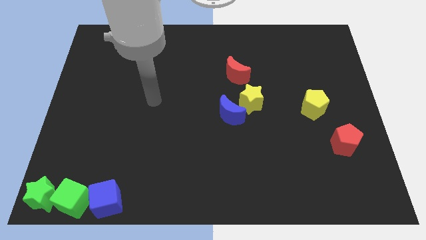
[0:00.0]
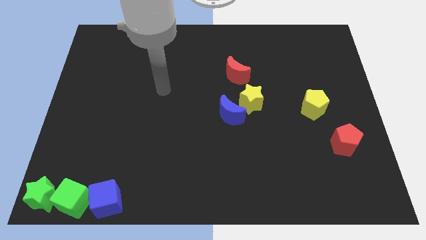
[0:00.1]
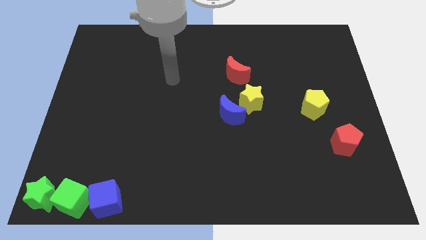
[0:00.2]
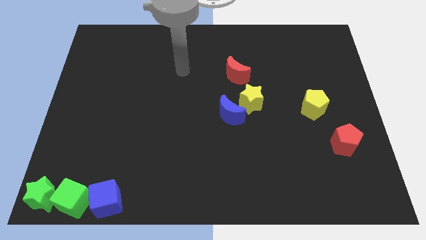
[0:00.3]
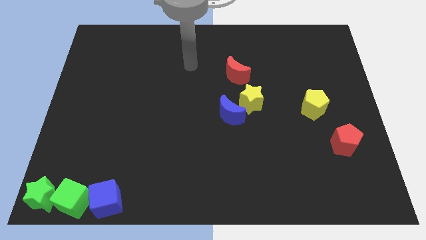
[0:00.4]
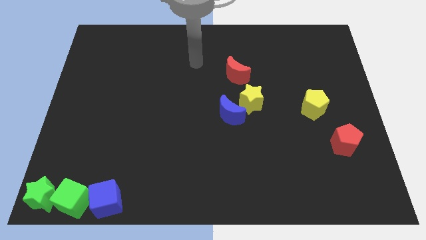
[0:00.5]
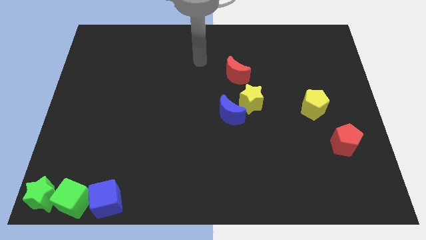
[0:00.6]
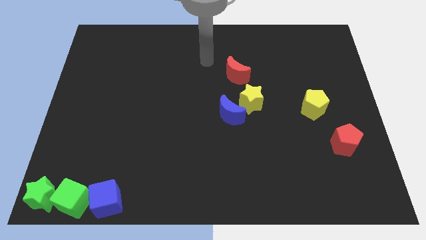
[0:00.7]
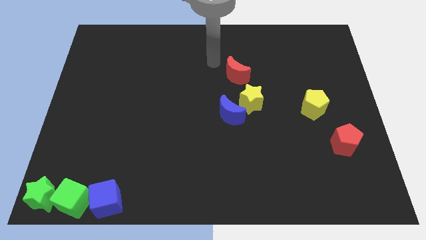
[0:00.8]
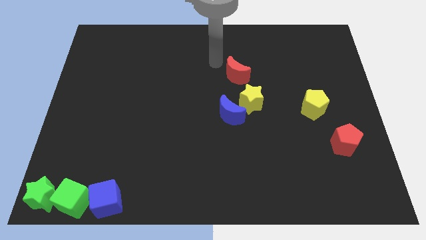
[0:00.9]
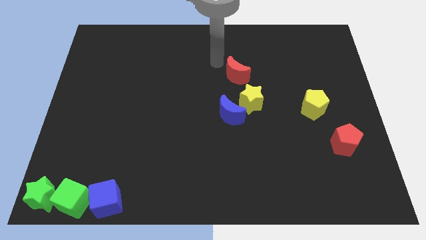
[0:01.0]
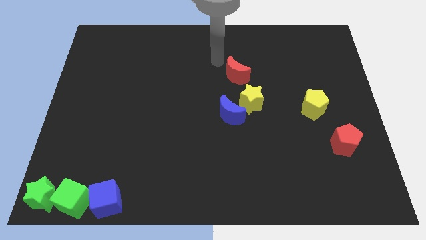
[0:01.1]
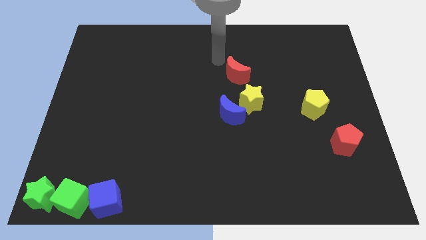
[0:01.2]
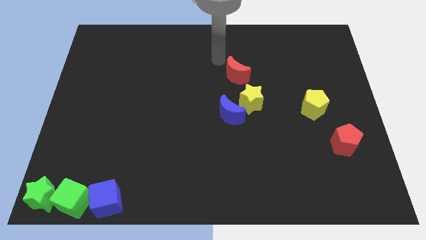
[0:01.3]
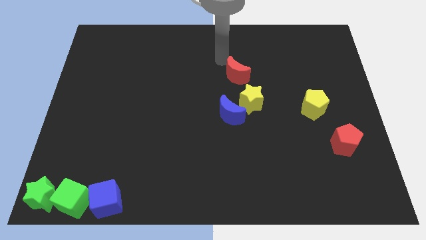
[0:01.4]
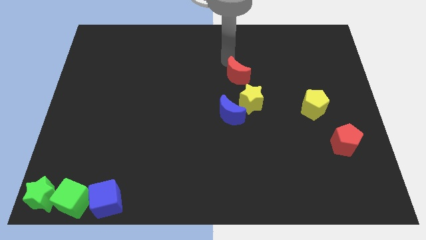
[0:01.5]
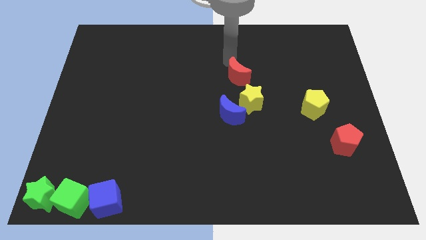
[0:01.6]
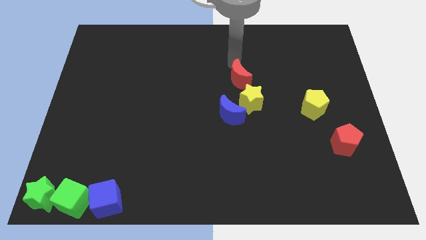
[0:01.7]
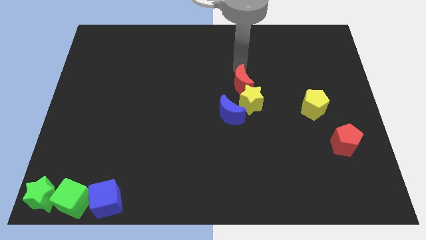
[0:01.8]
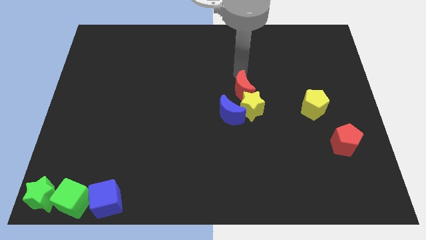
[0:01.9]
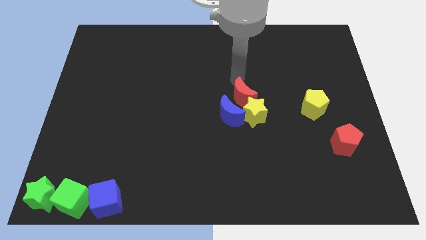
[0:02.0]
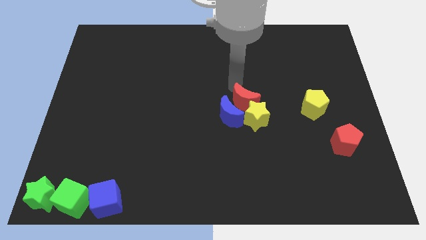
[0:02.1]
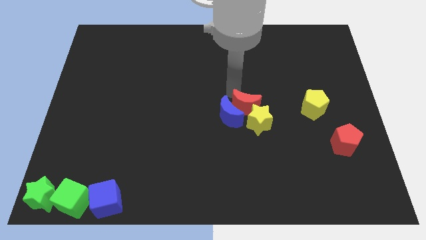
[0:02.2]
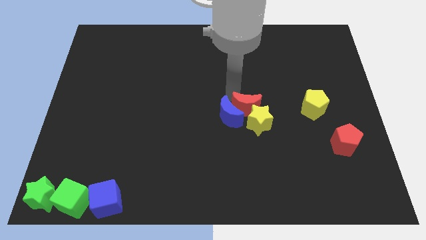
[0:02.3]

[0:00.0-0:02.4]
push the red moon into the yellow star

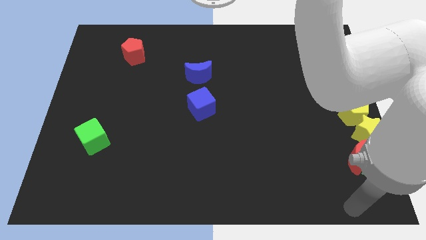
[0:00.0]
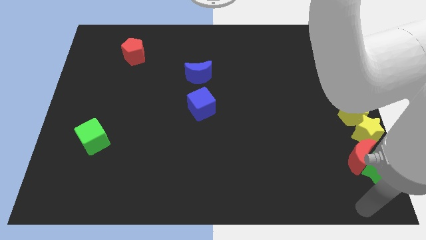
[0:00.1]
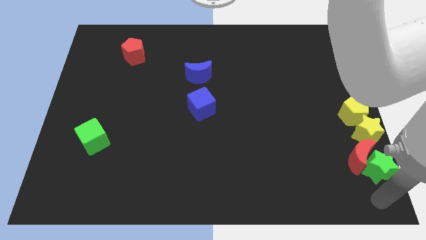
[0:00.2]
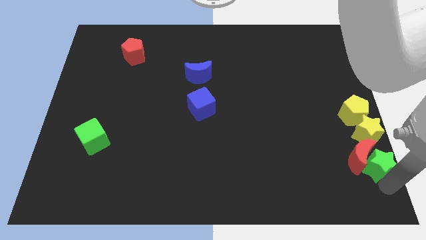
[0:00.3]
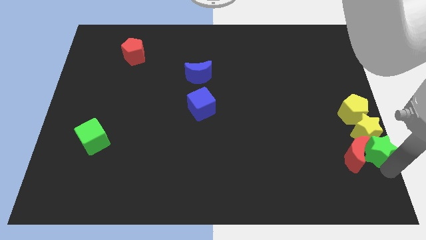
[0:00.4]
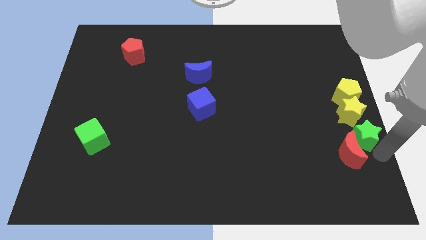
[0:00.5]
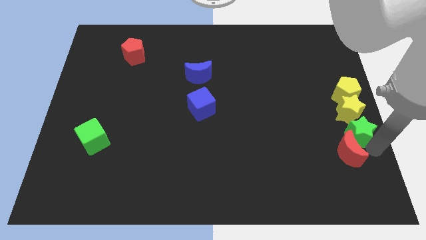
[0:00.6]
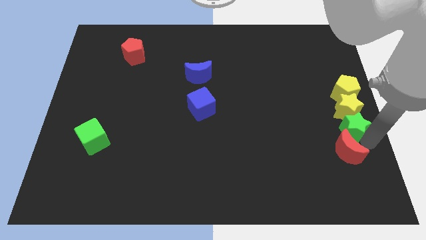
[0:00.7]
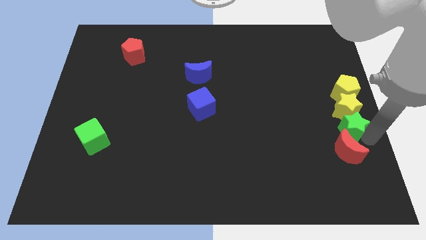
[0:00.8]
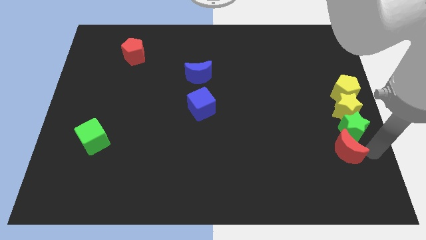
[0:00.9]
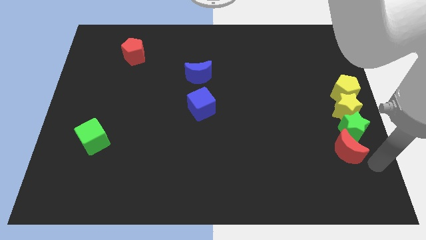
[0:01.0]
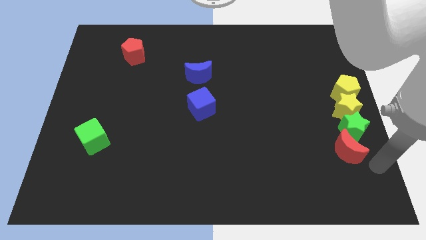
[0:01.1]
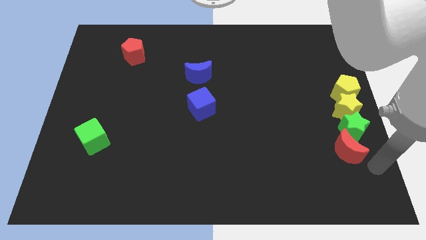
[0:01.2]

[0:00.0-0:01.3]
move the green star below the yellow star

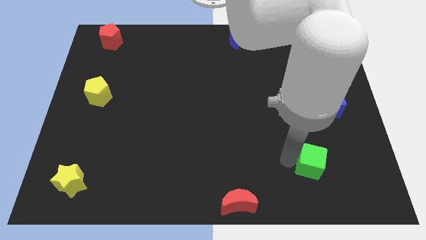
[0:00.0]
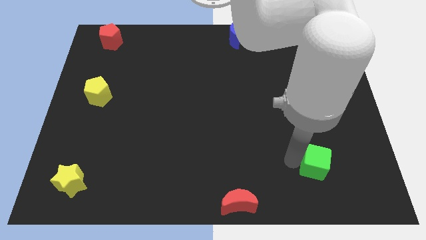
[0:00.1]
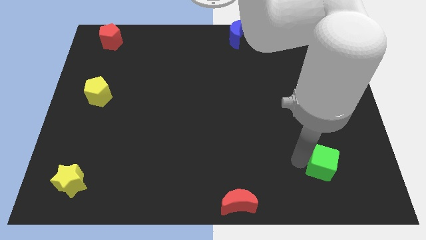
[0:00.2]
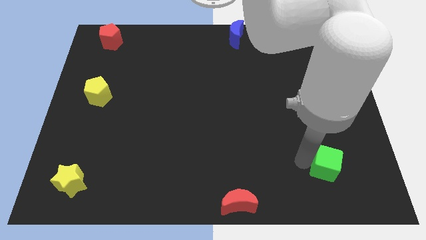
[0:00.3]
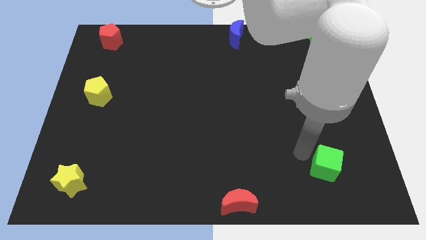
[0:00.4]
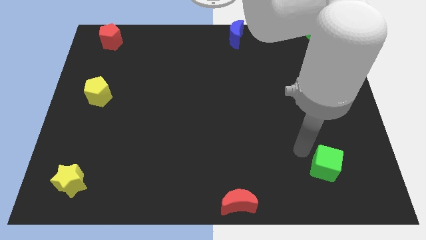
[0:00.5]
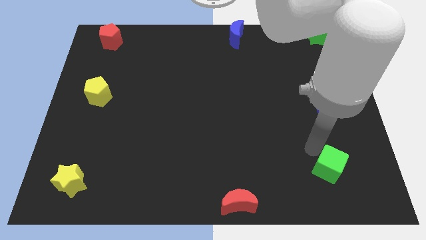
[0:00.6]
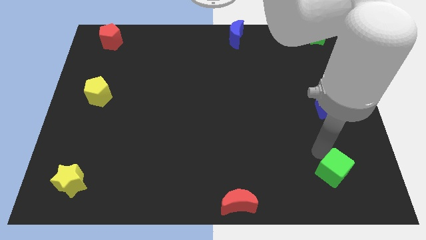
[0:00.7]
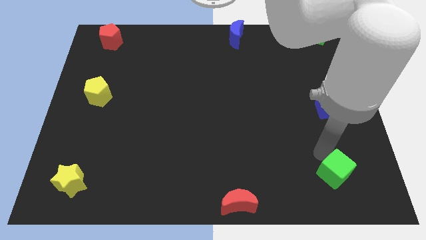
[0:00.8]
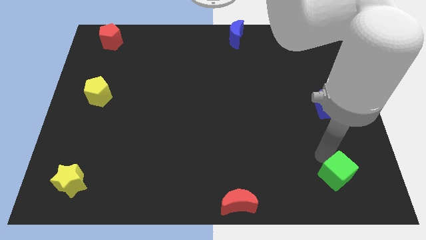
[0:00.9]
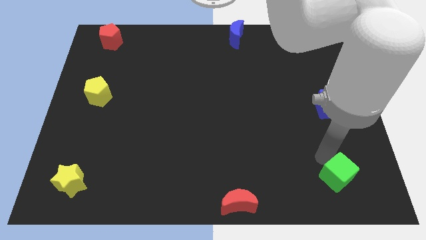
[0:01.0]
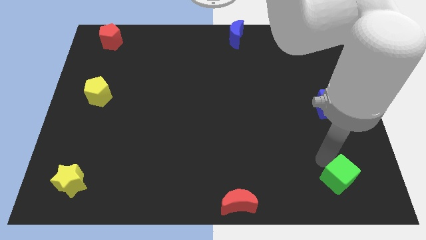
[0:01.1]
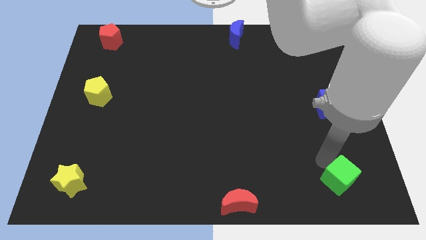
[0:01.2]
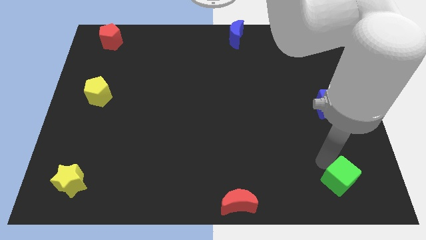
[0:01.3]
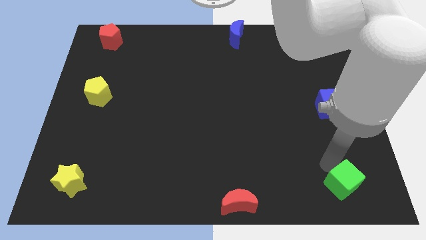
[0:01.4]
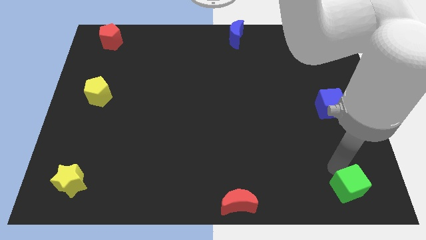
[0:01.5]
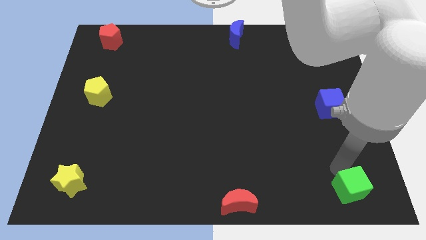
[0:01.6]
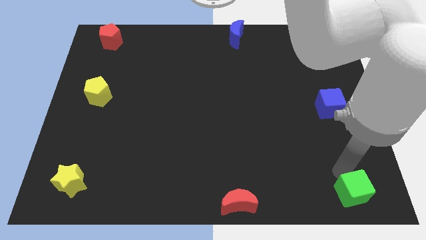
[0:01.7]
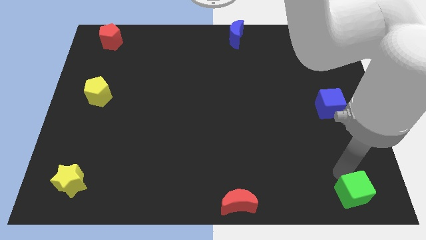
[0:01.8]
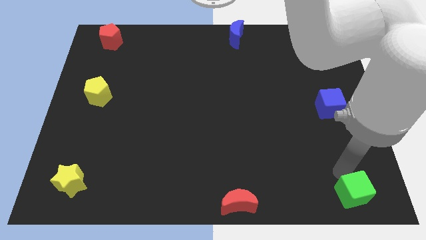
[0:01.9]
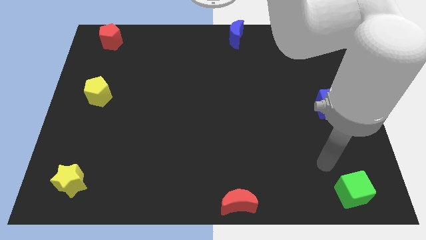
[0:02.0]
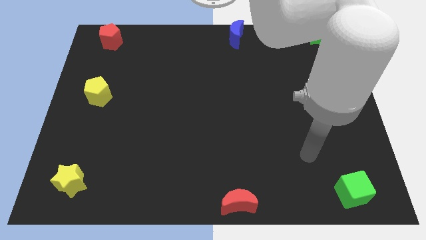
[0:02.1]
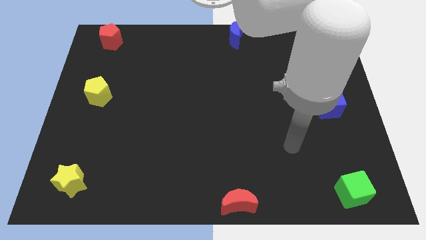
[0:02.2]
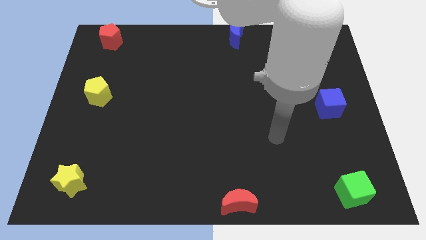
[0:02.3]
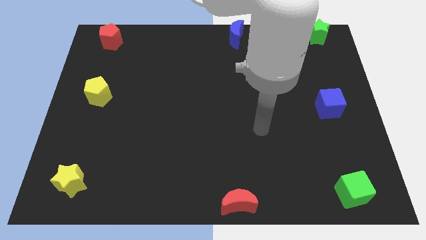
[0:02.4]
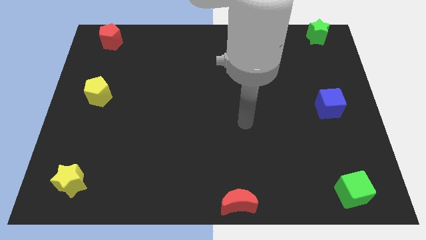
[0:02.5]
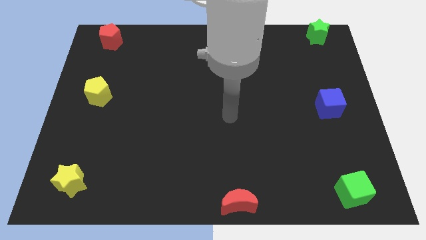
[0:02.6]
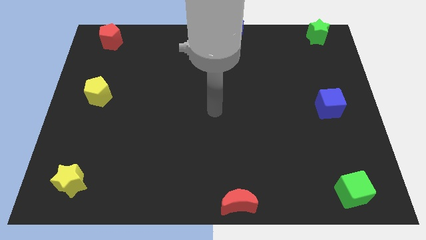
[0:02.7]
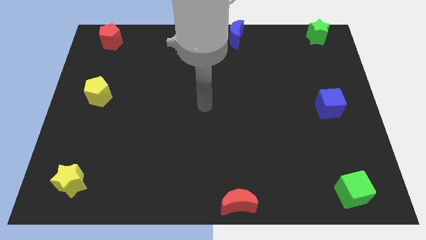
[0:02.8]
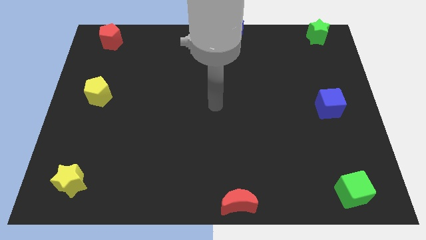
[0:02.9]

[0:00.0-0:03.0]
move the green cube to the bottom right

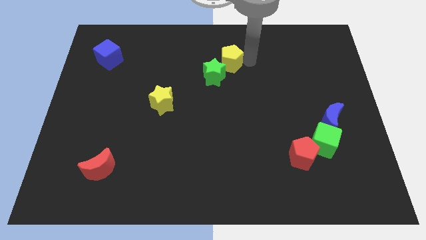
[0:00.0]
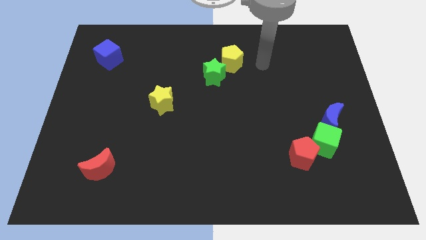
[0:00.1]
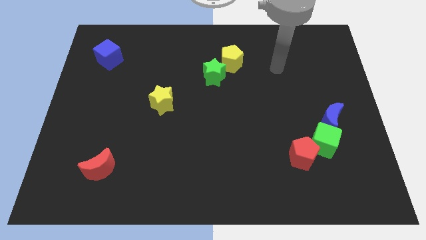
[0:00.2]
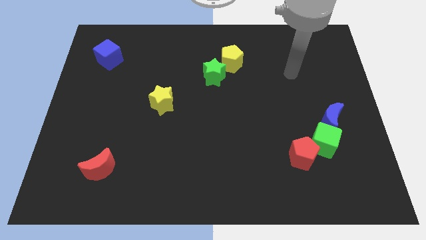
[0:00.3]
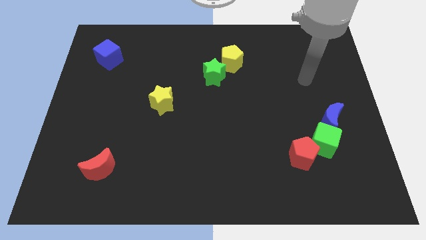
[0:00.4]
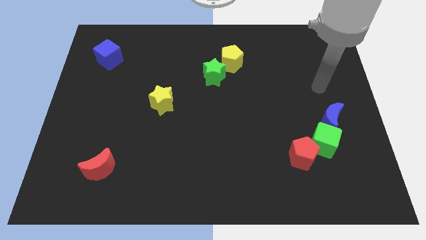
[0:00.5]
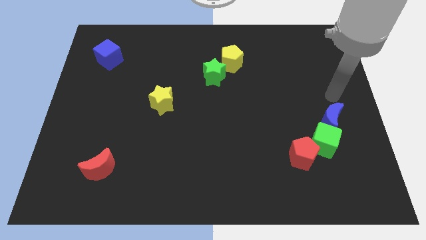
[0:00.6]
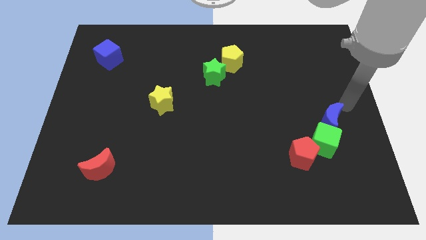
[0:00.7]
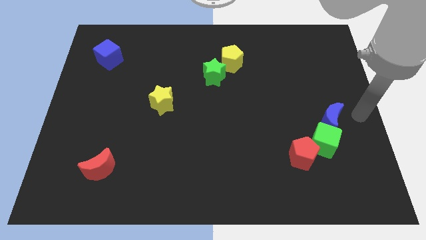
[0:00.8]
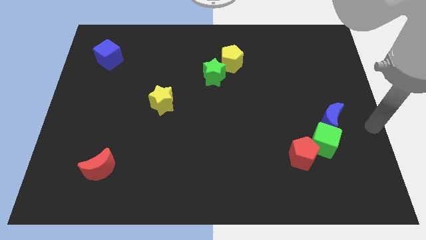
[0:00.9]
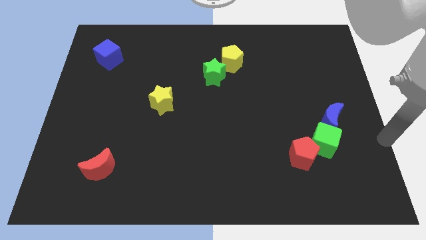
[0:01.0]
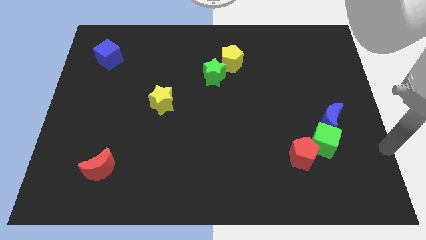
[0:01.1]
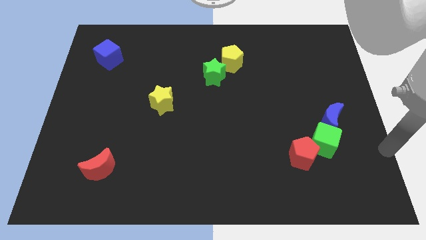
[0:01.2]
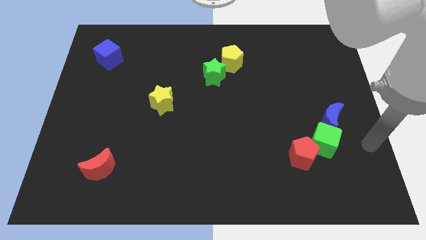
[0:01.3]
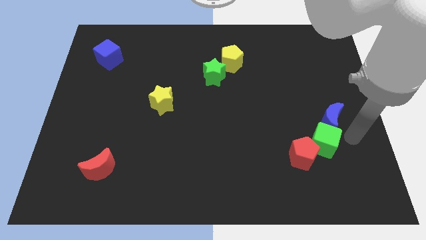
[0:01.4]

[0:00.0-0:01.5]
place the arm diagonal to the blue moon

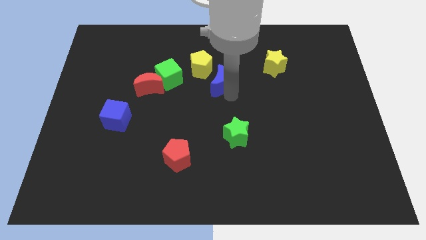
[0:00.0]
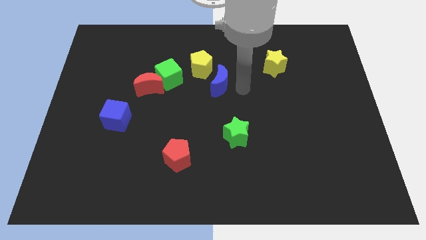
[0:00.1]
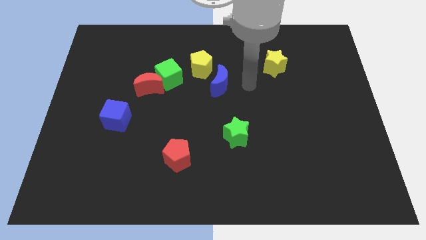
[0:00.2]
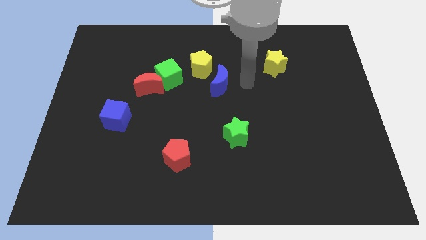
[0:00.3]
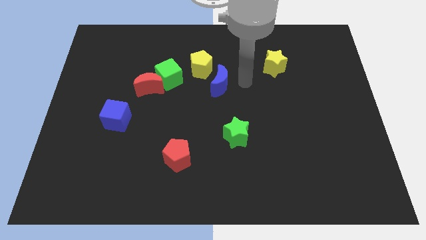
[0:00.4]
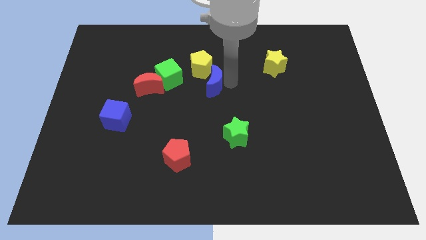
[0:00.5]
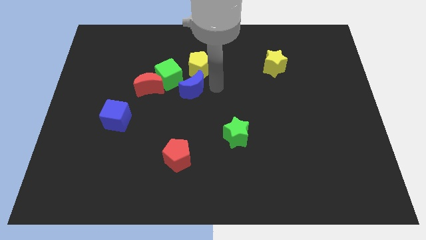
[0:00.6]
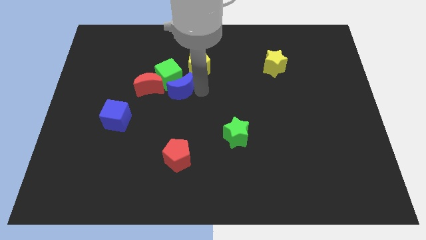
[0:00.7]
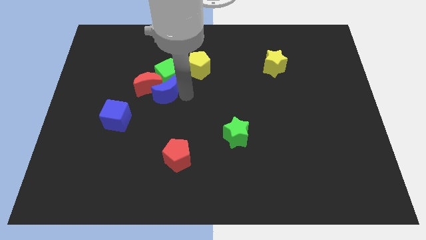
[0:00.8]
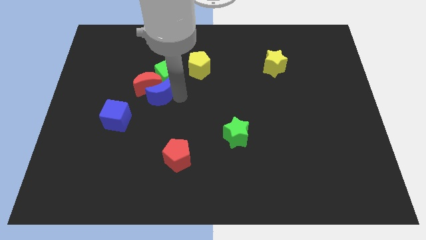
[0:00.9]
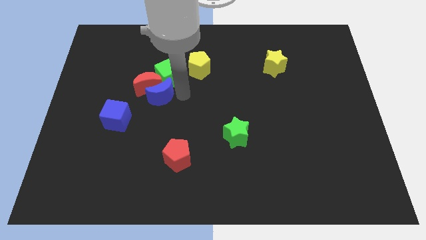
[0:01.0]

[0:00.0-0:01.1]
move the blue crescent into the red crescent
